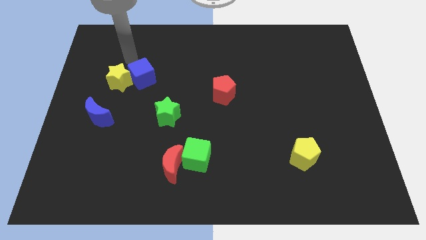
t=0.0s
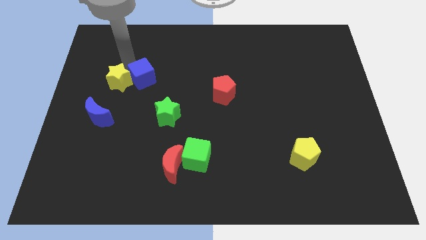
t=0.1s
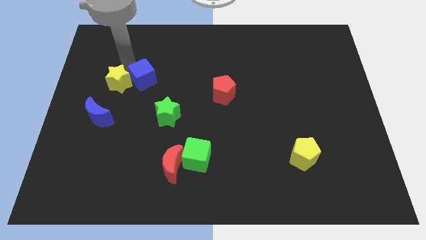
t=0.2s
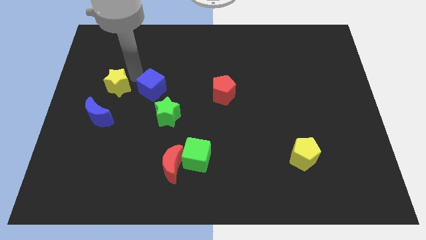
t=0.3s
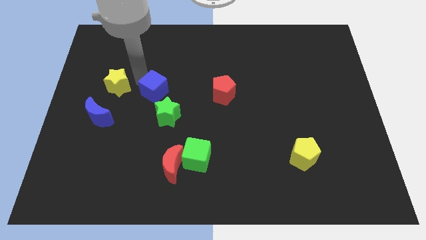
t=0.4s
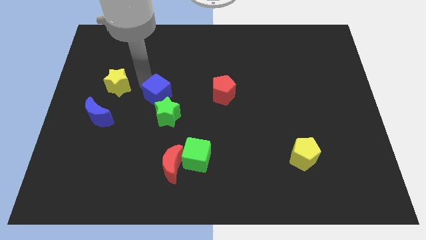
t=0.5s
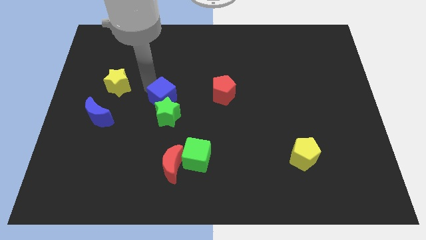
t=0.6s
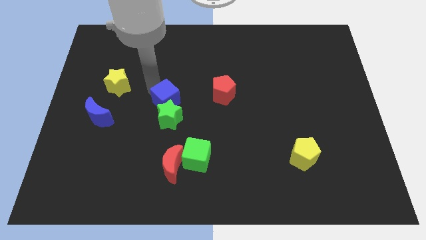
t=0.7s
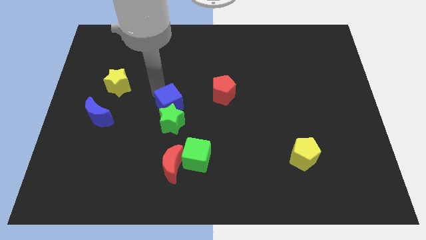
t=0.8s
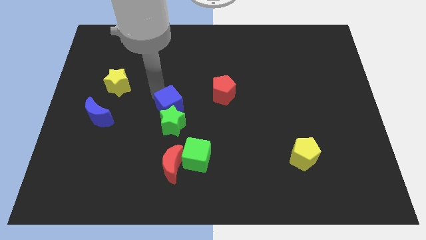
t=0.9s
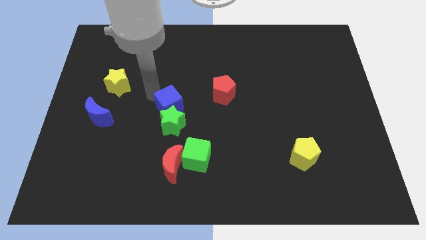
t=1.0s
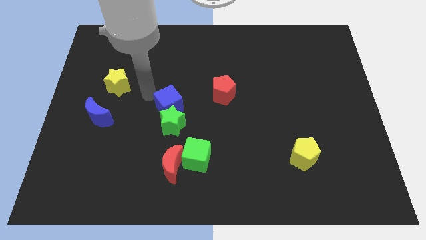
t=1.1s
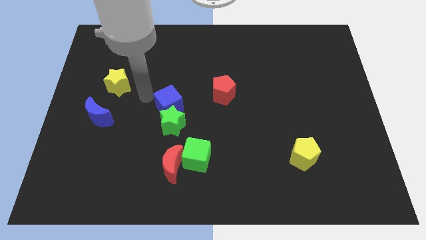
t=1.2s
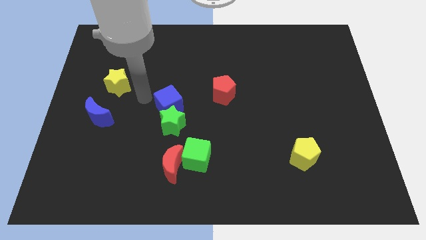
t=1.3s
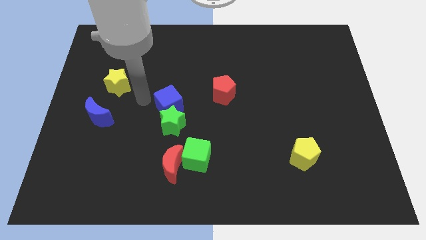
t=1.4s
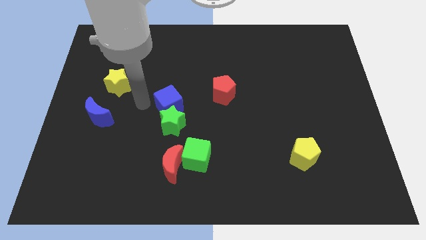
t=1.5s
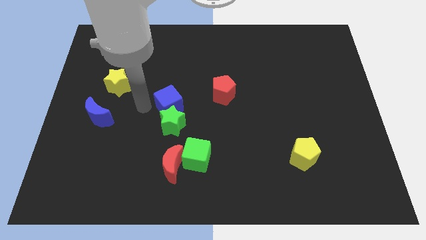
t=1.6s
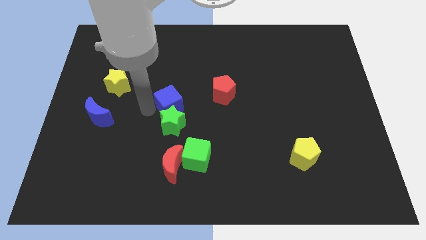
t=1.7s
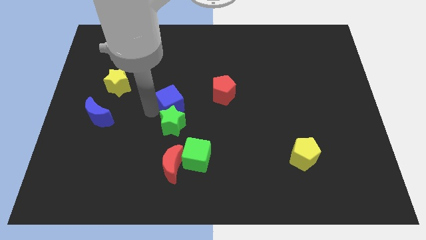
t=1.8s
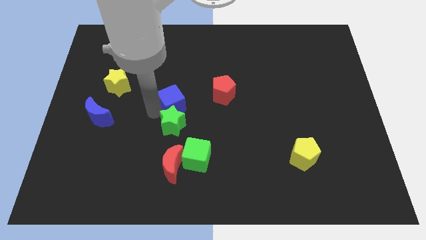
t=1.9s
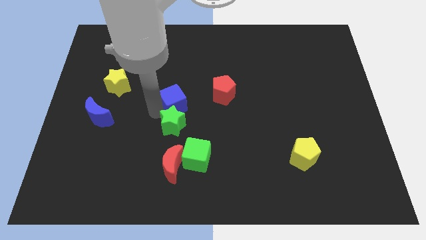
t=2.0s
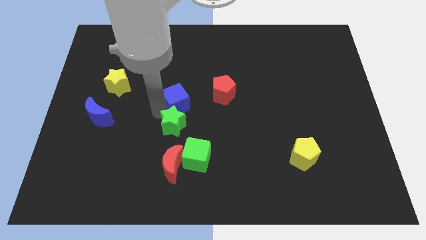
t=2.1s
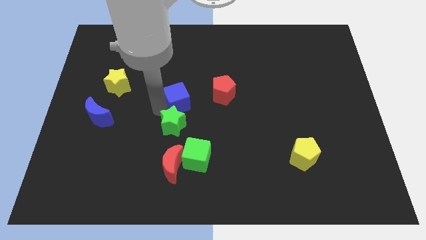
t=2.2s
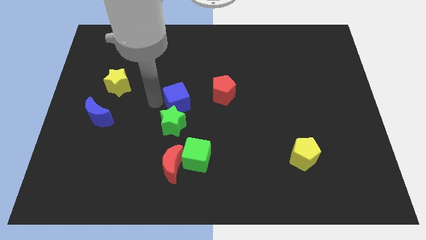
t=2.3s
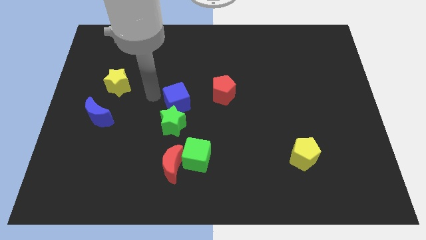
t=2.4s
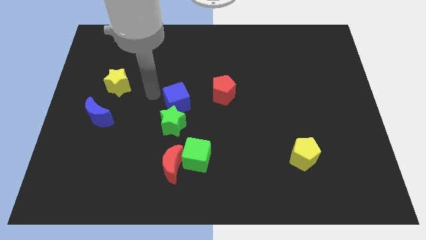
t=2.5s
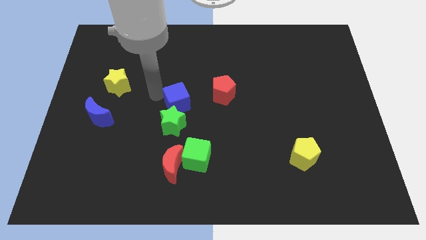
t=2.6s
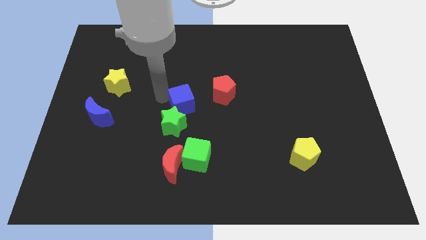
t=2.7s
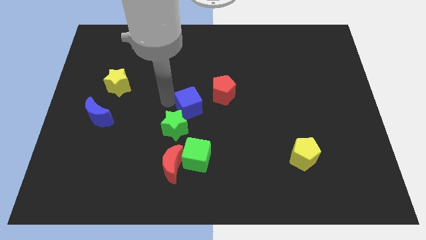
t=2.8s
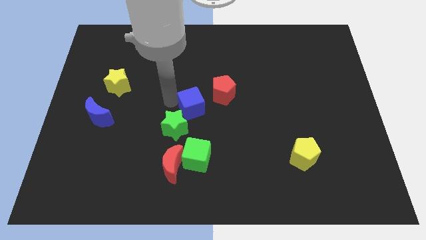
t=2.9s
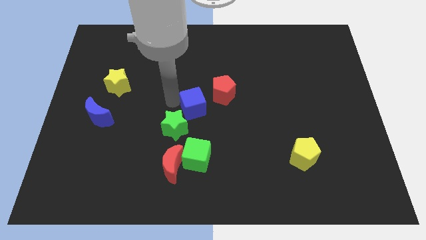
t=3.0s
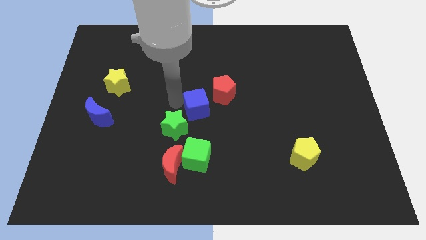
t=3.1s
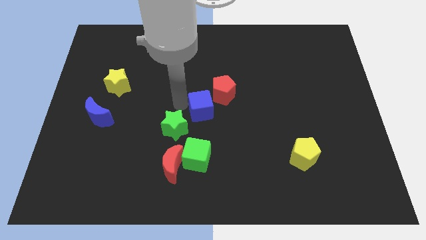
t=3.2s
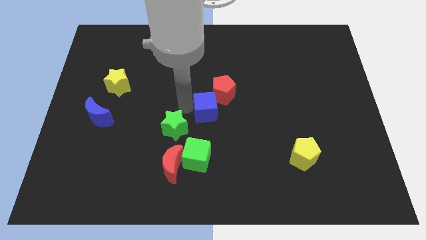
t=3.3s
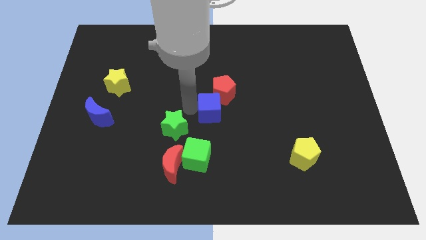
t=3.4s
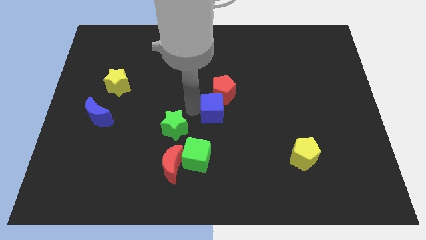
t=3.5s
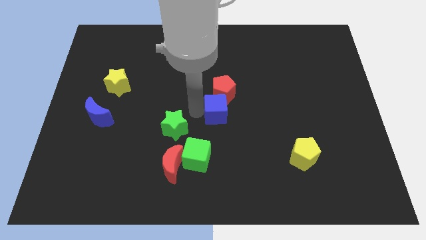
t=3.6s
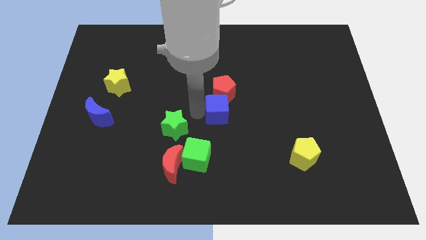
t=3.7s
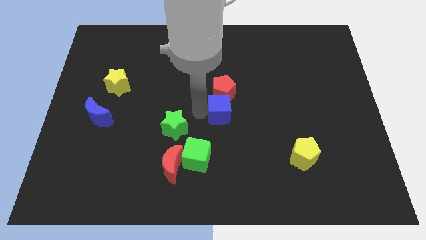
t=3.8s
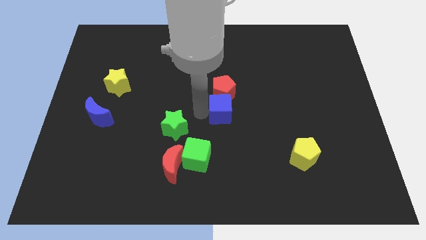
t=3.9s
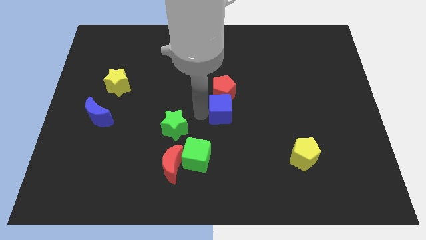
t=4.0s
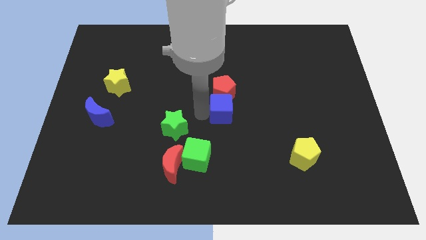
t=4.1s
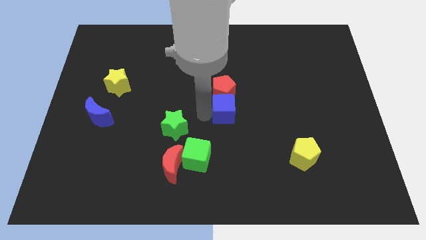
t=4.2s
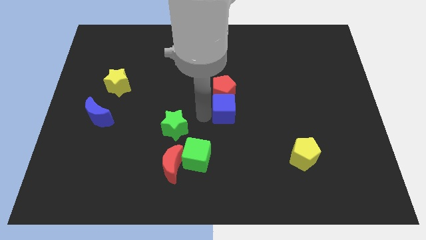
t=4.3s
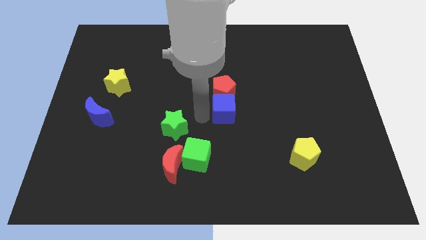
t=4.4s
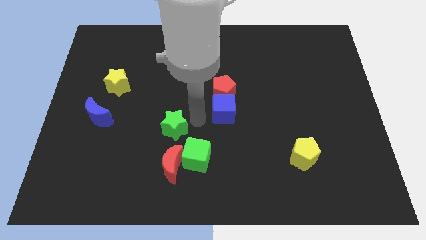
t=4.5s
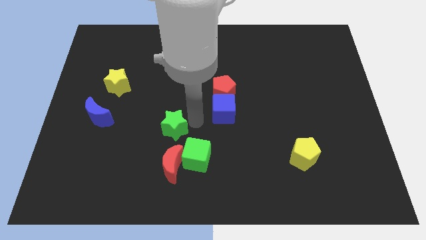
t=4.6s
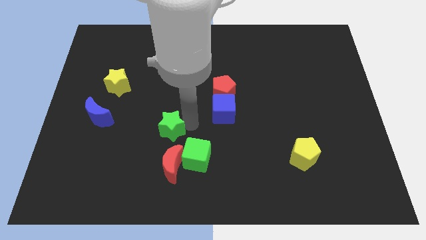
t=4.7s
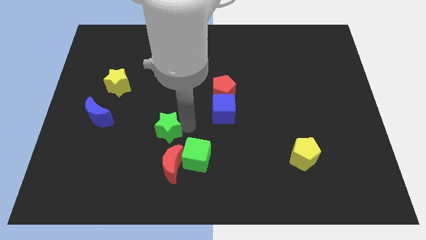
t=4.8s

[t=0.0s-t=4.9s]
push the blue cube underneath the red pentagon

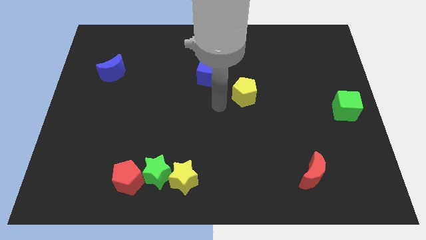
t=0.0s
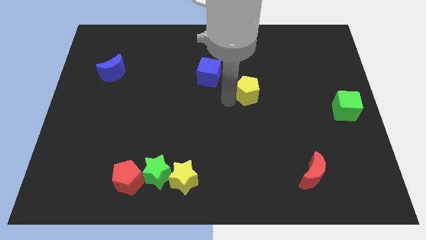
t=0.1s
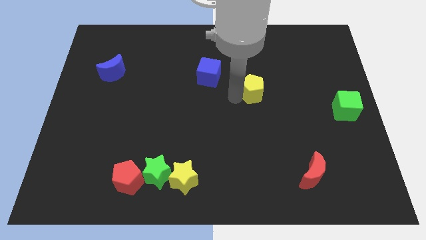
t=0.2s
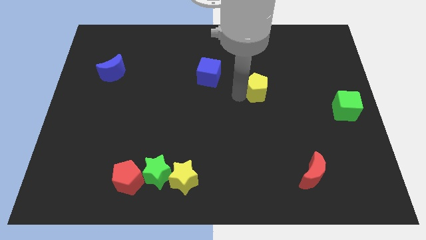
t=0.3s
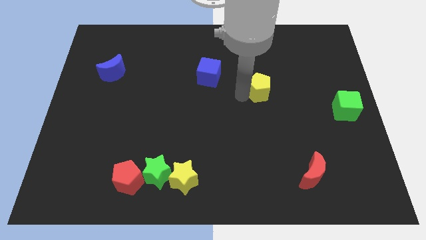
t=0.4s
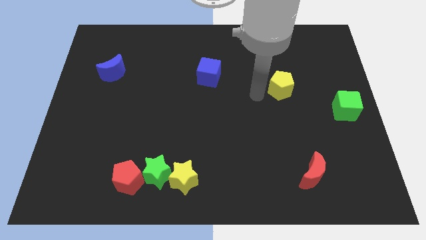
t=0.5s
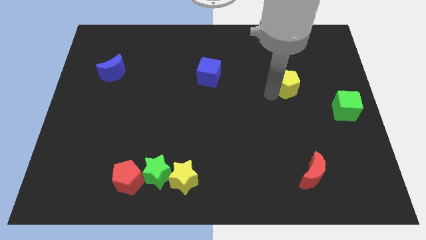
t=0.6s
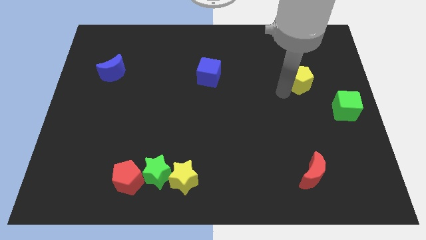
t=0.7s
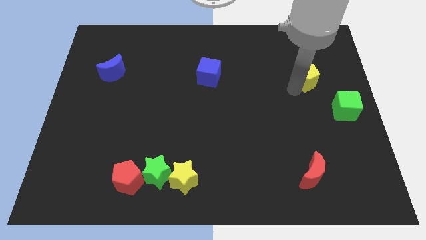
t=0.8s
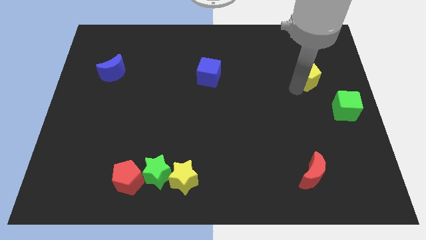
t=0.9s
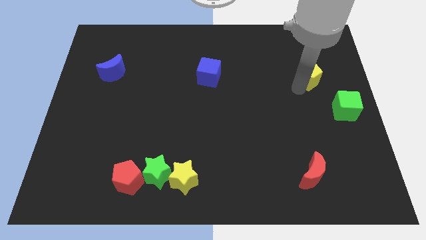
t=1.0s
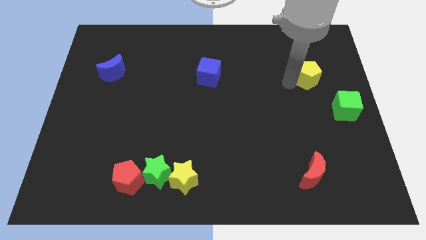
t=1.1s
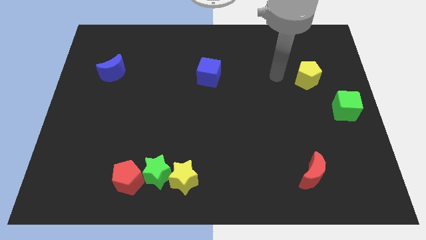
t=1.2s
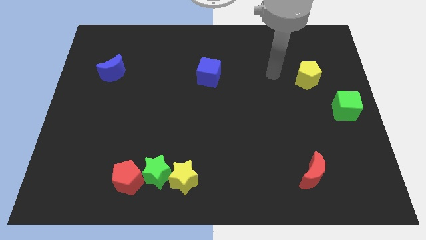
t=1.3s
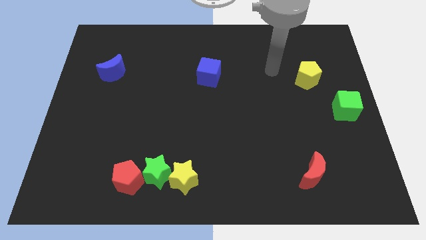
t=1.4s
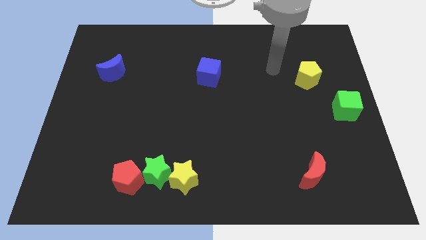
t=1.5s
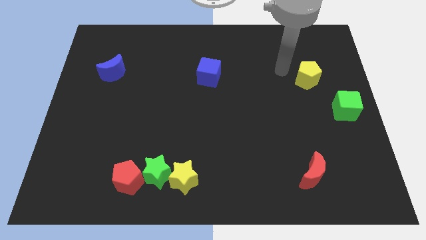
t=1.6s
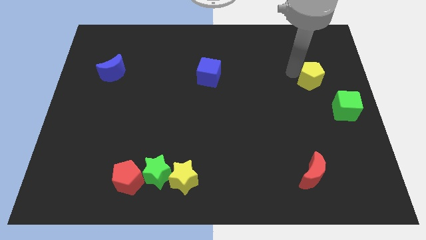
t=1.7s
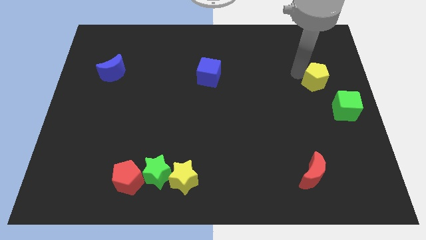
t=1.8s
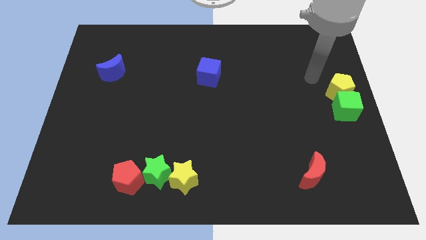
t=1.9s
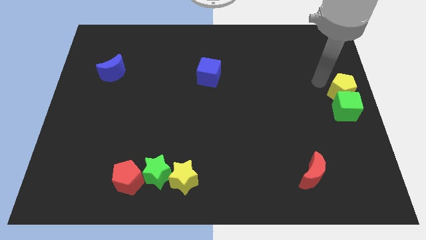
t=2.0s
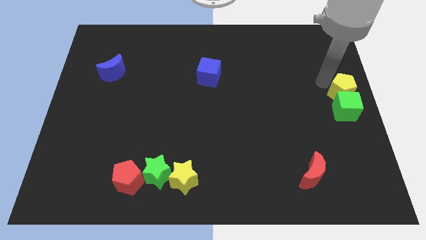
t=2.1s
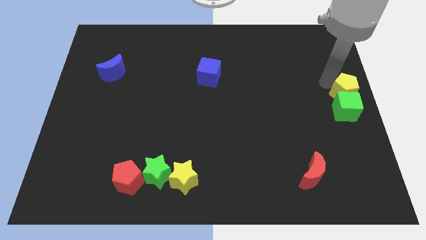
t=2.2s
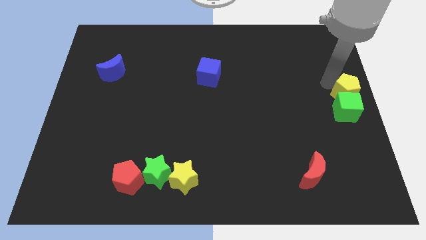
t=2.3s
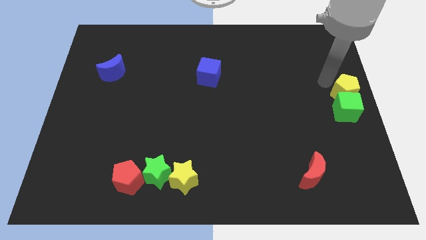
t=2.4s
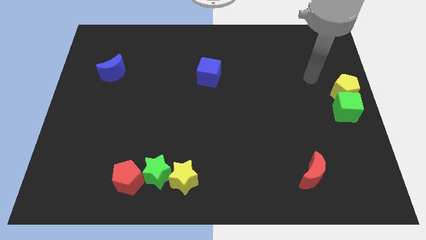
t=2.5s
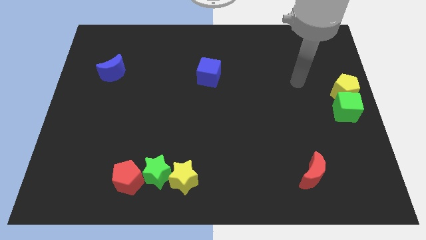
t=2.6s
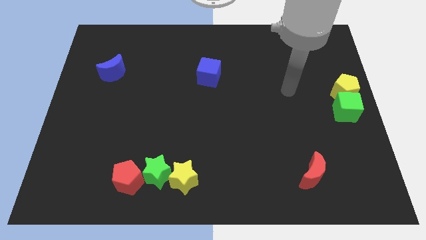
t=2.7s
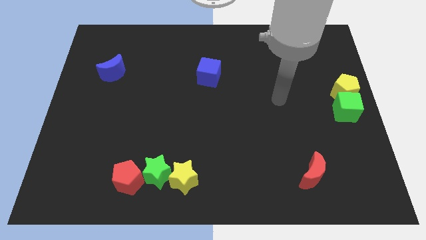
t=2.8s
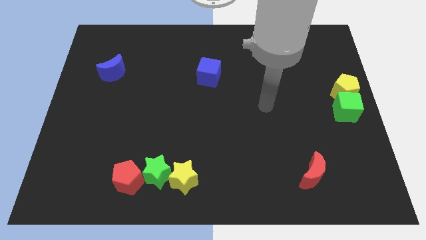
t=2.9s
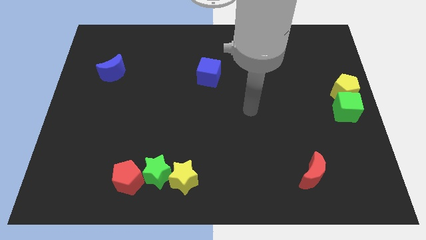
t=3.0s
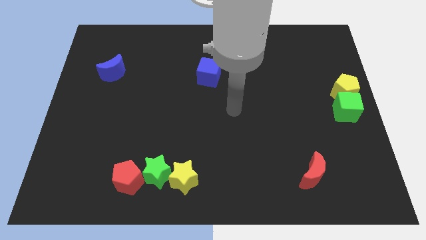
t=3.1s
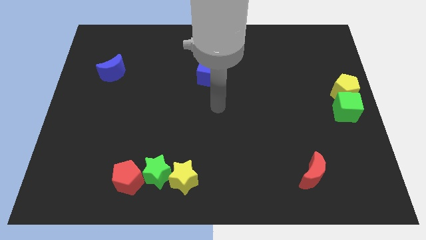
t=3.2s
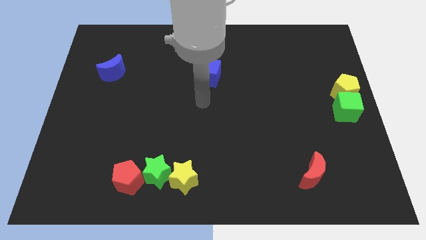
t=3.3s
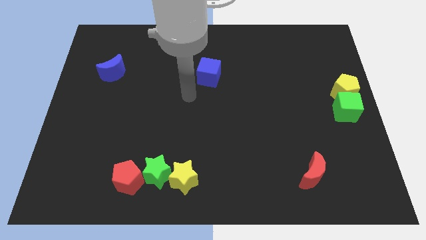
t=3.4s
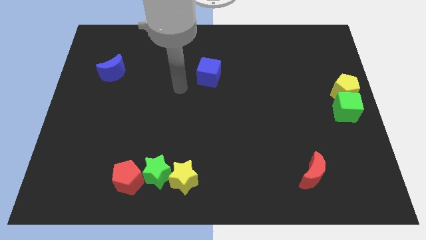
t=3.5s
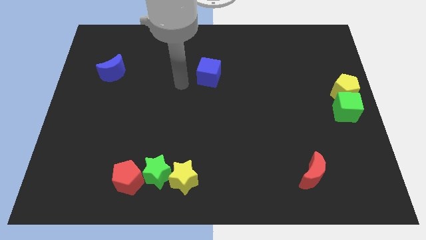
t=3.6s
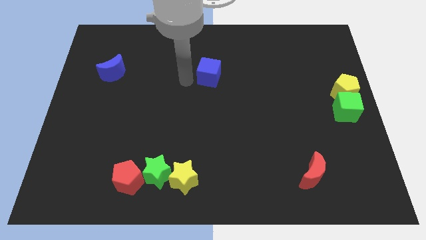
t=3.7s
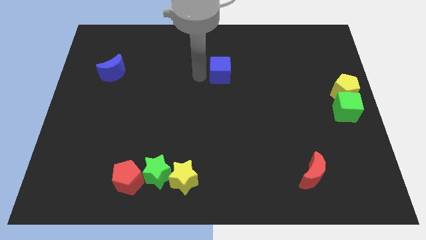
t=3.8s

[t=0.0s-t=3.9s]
place the yellow pentagon near the green cube

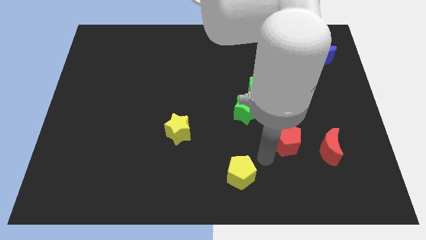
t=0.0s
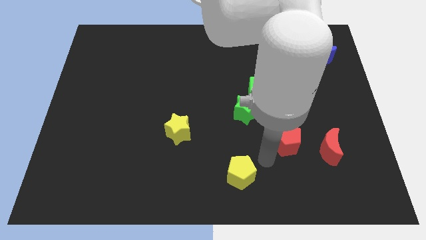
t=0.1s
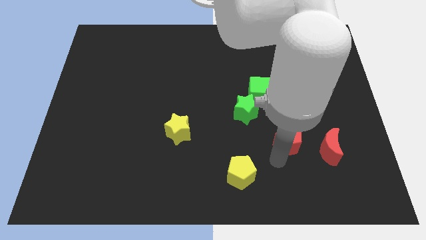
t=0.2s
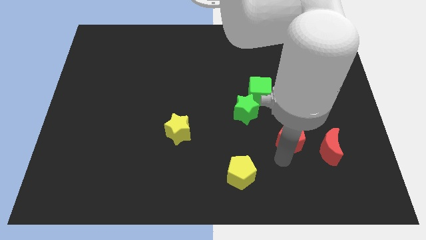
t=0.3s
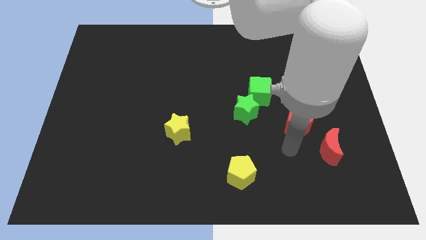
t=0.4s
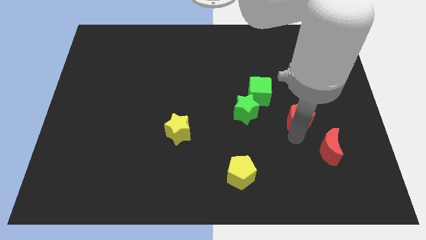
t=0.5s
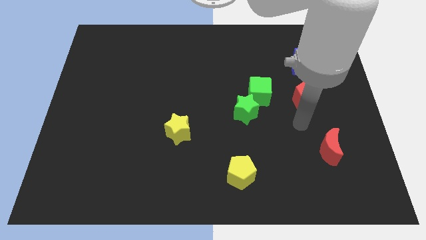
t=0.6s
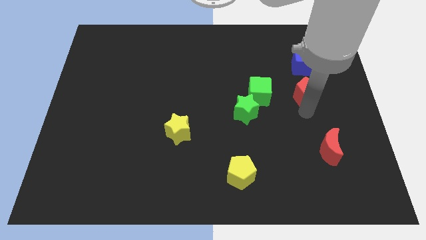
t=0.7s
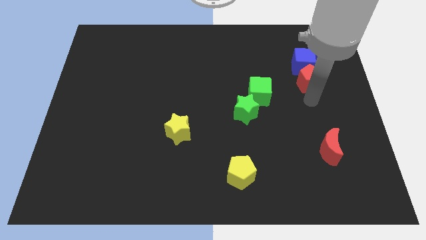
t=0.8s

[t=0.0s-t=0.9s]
place red pentagon below blue cube
